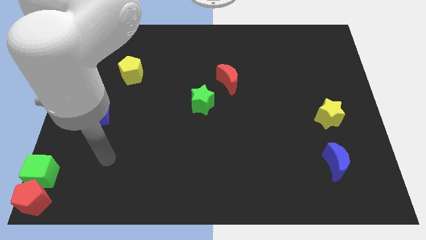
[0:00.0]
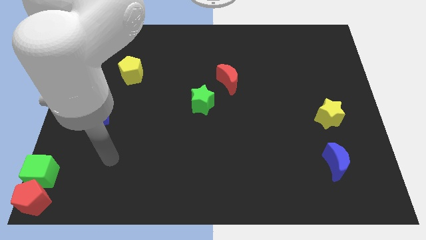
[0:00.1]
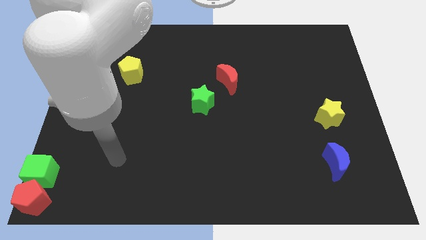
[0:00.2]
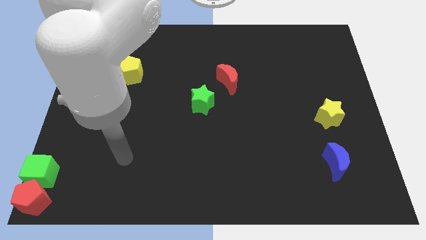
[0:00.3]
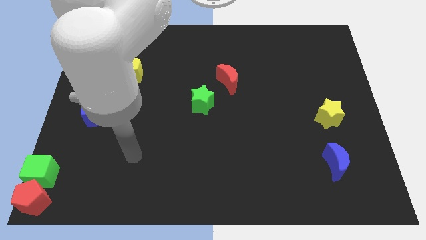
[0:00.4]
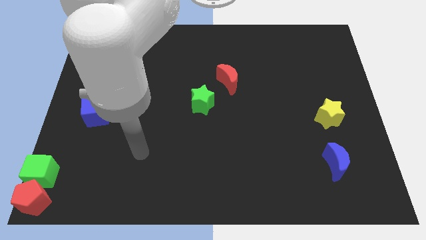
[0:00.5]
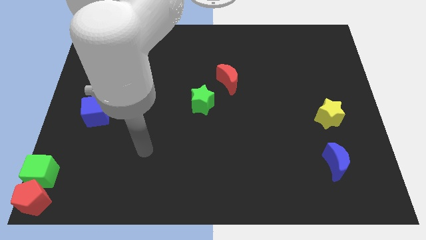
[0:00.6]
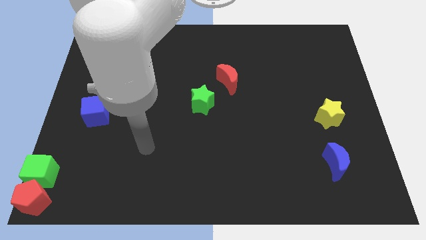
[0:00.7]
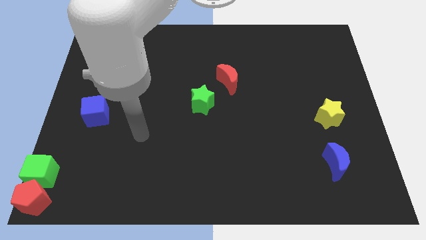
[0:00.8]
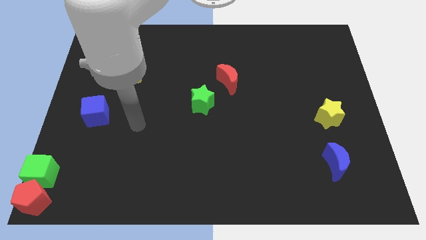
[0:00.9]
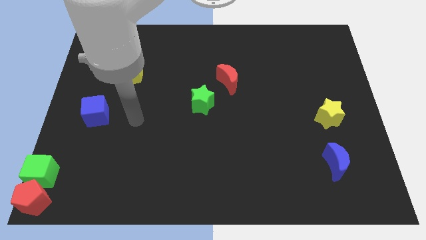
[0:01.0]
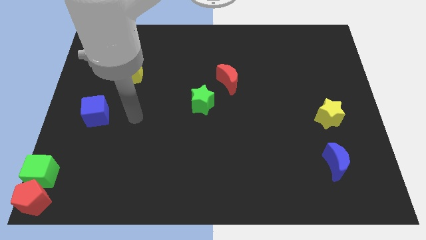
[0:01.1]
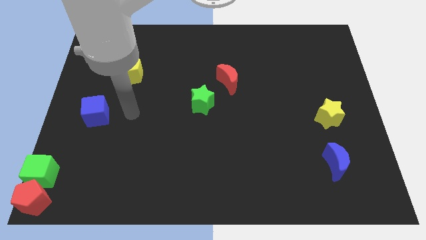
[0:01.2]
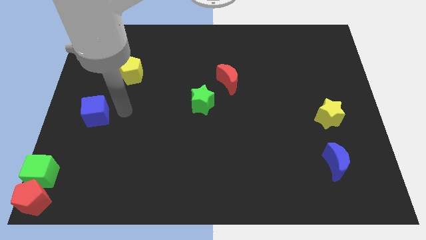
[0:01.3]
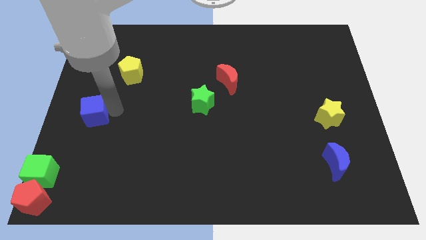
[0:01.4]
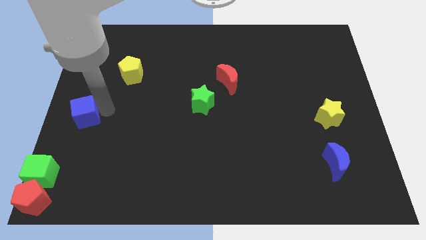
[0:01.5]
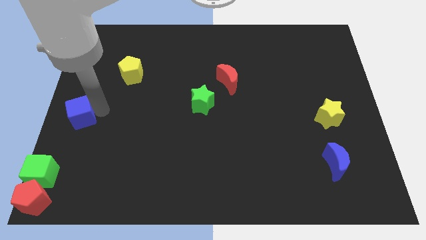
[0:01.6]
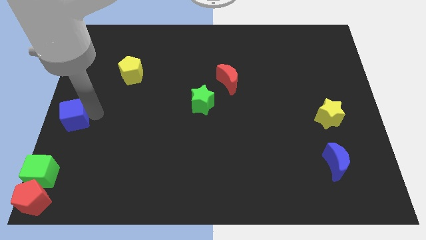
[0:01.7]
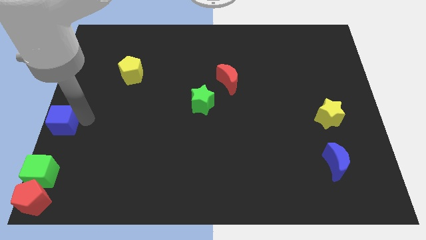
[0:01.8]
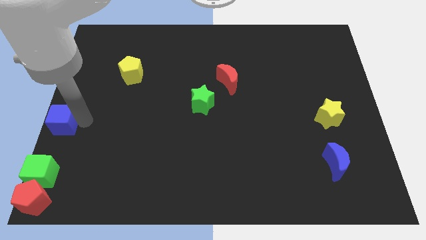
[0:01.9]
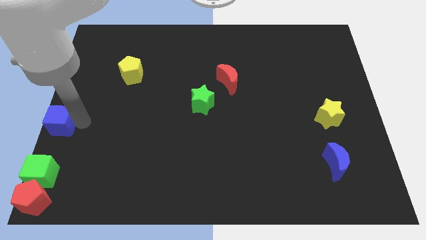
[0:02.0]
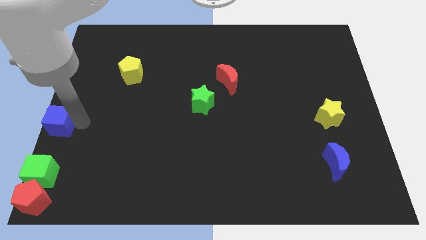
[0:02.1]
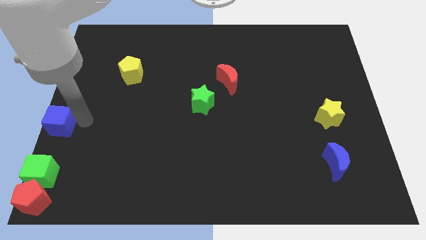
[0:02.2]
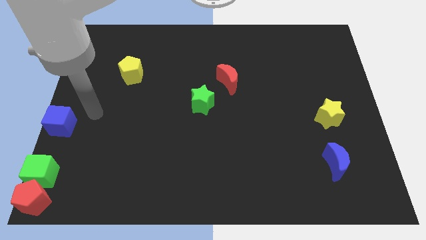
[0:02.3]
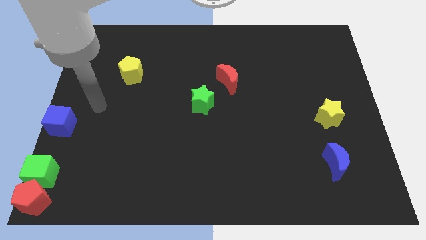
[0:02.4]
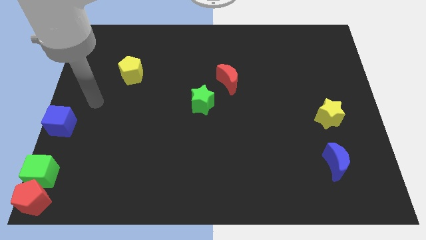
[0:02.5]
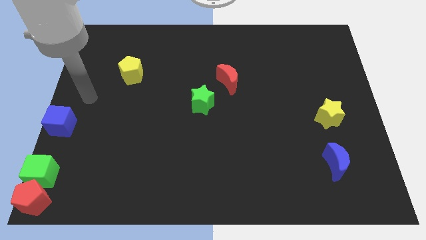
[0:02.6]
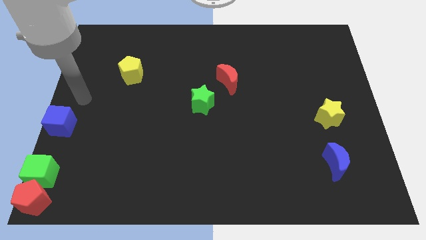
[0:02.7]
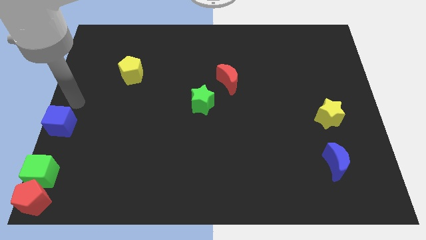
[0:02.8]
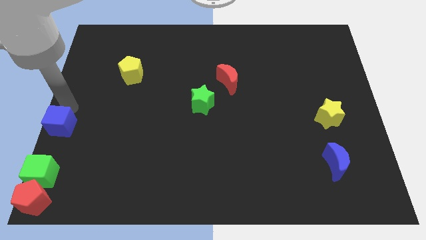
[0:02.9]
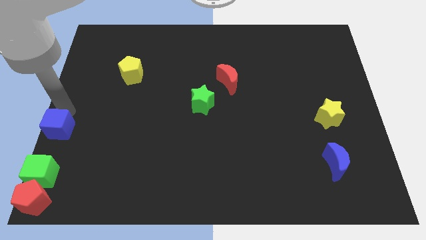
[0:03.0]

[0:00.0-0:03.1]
place the blue cube to the center left

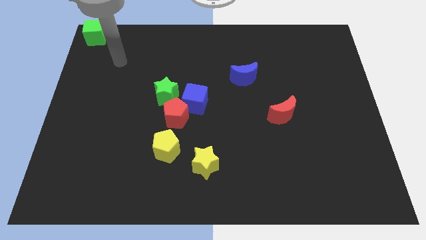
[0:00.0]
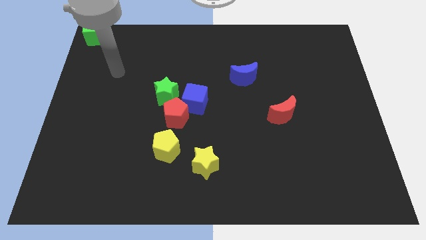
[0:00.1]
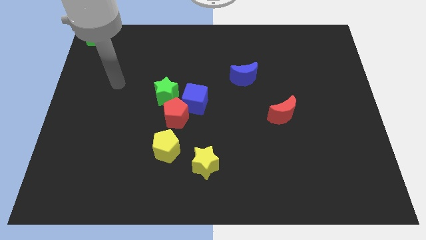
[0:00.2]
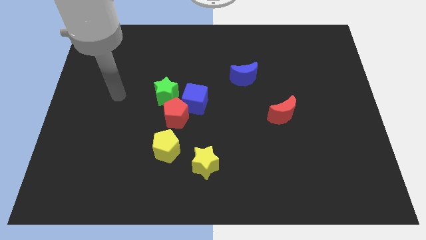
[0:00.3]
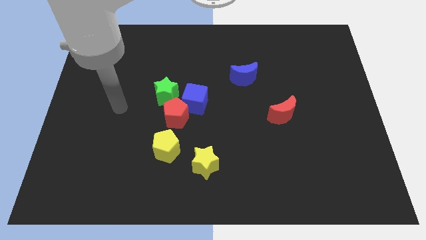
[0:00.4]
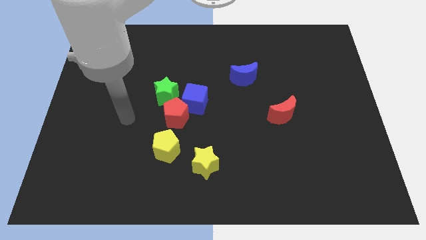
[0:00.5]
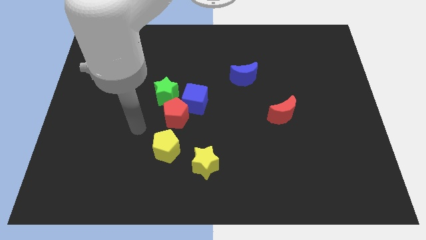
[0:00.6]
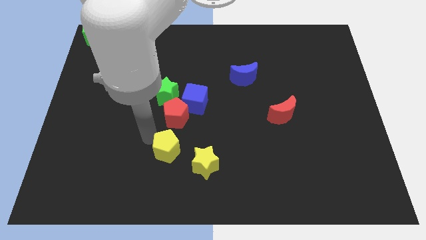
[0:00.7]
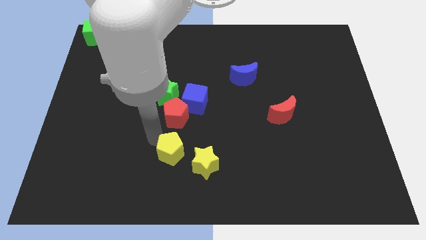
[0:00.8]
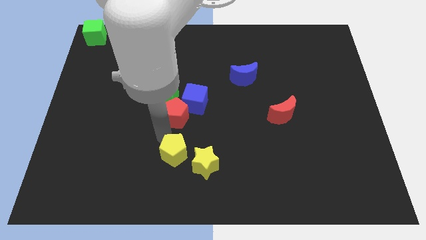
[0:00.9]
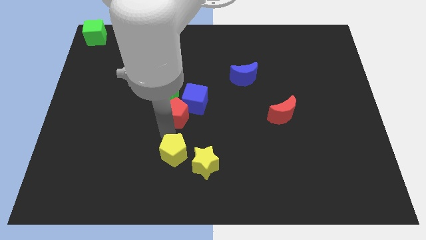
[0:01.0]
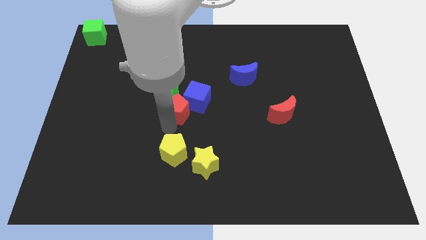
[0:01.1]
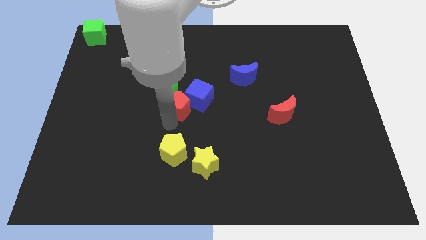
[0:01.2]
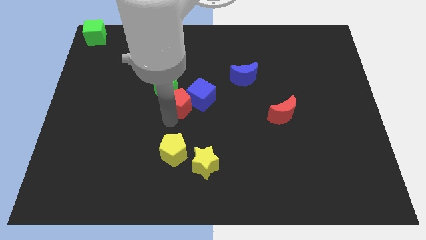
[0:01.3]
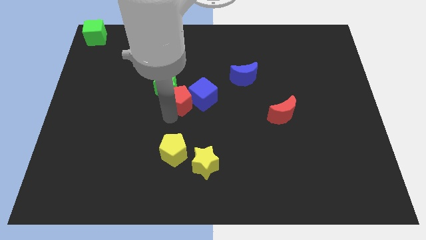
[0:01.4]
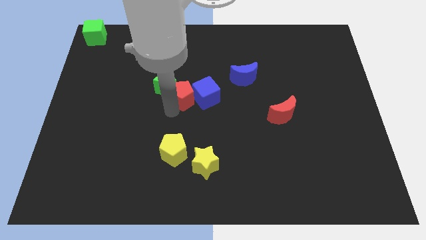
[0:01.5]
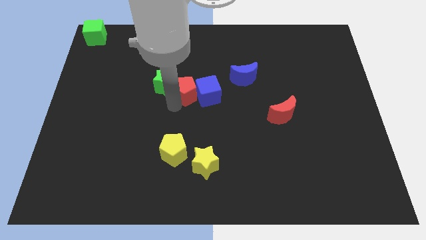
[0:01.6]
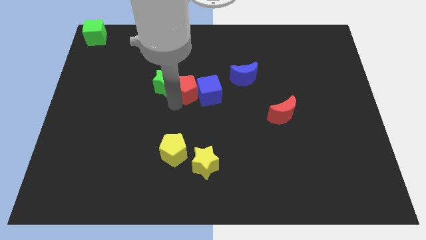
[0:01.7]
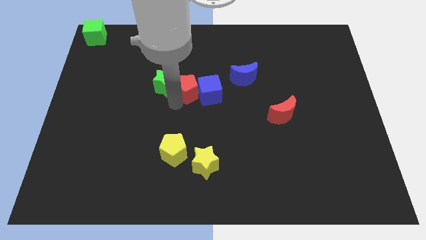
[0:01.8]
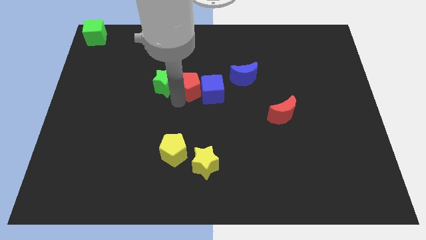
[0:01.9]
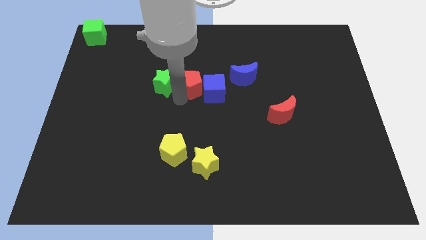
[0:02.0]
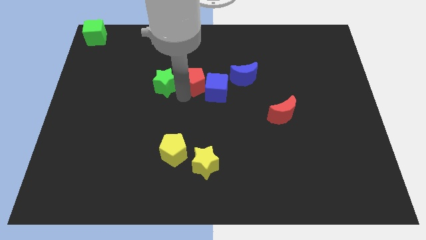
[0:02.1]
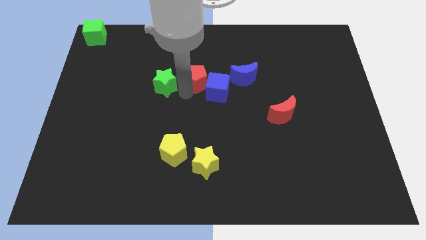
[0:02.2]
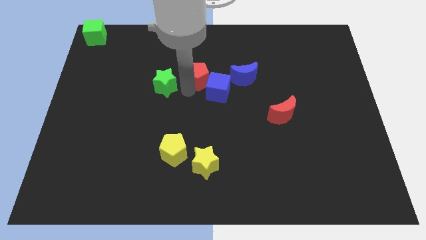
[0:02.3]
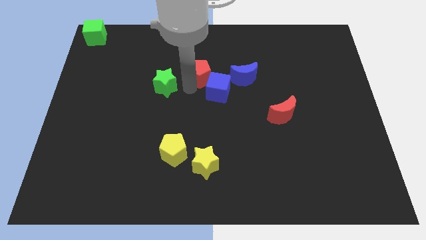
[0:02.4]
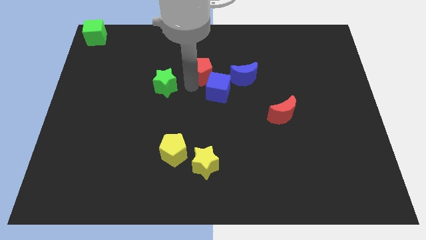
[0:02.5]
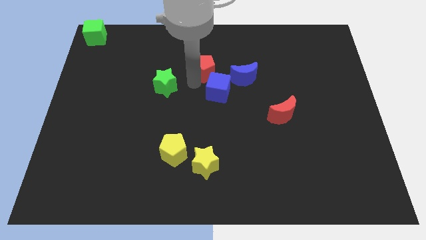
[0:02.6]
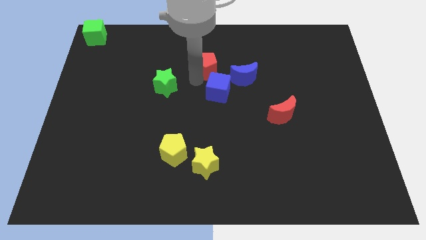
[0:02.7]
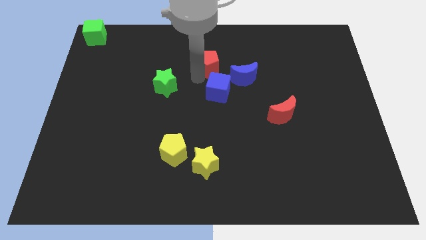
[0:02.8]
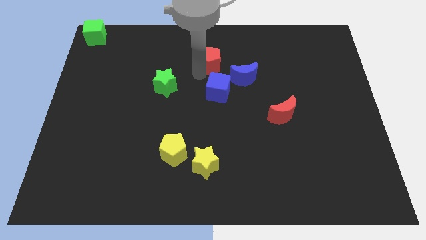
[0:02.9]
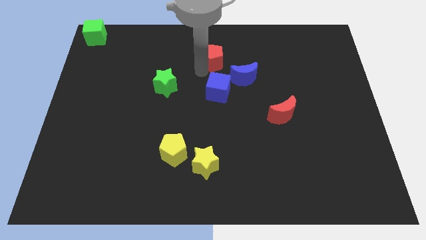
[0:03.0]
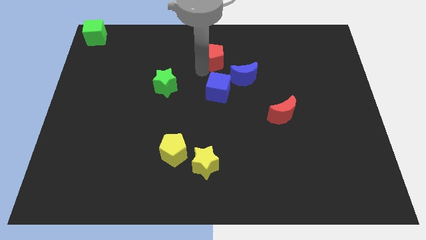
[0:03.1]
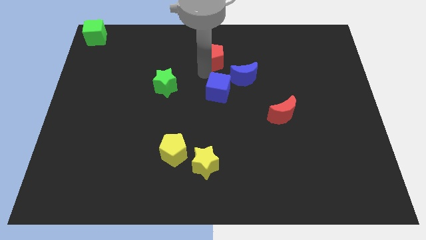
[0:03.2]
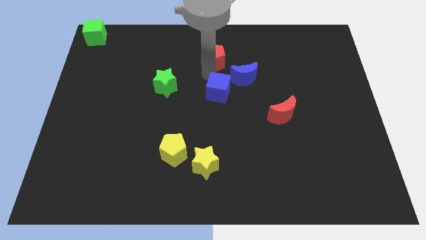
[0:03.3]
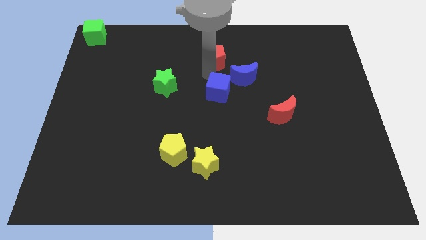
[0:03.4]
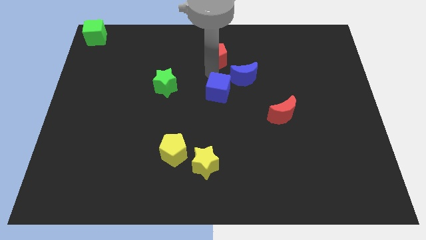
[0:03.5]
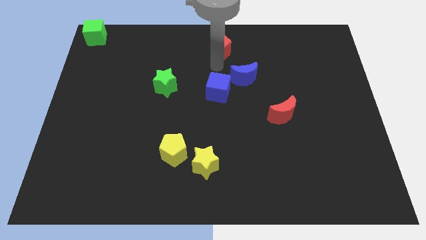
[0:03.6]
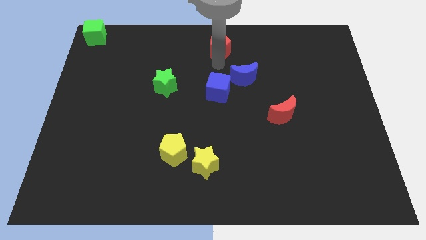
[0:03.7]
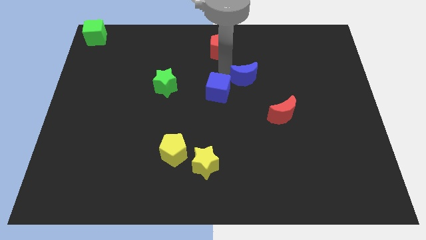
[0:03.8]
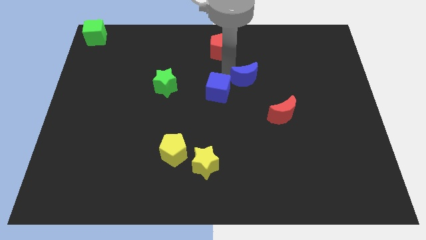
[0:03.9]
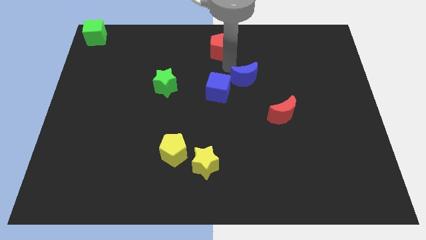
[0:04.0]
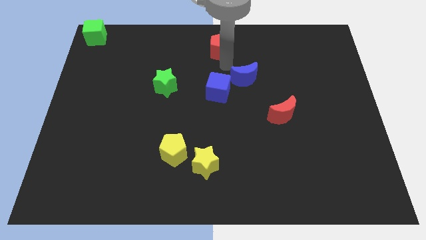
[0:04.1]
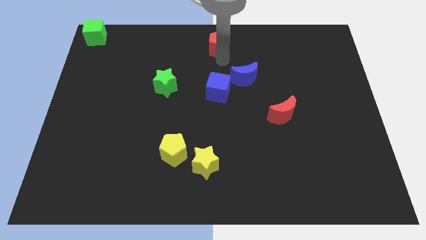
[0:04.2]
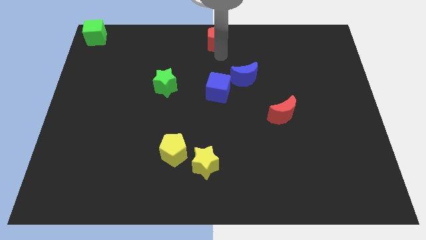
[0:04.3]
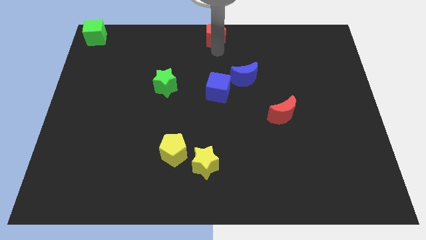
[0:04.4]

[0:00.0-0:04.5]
slide the red pentagon at the top center

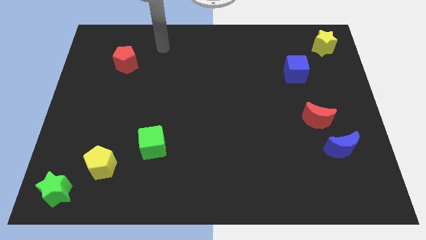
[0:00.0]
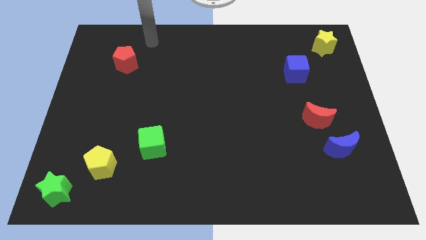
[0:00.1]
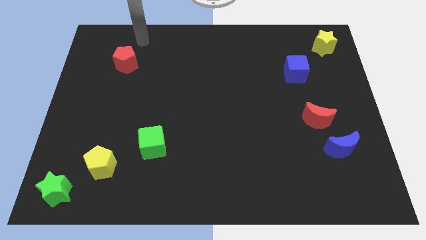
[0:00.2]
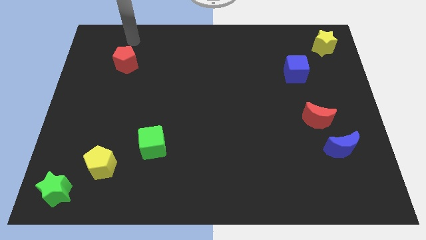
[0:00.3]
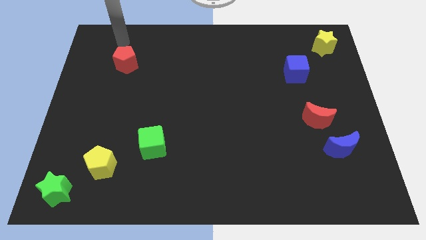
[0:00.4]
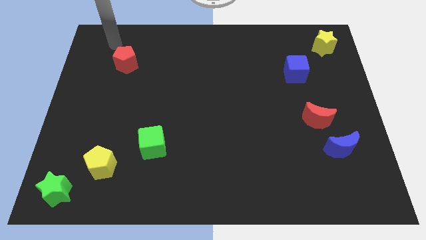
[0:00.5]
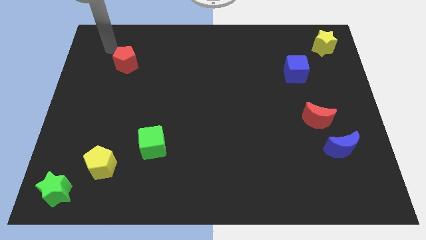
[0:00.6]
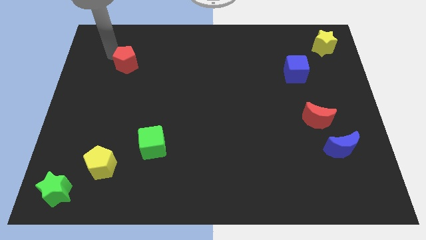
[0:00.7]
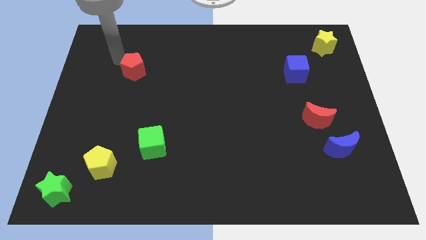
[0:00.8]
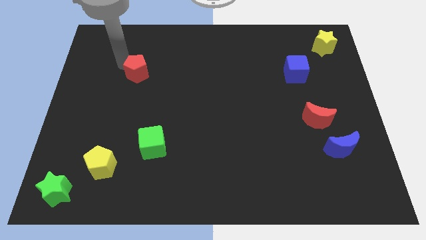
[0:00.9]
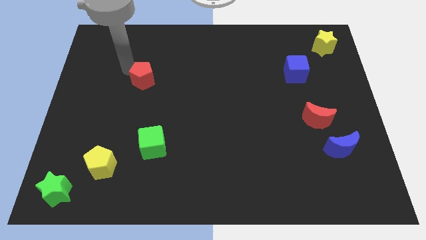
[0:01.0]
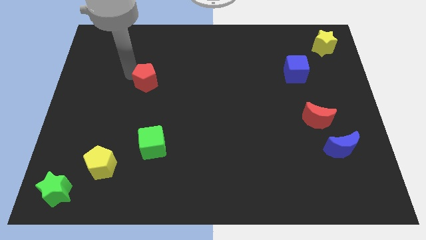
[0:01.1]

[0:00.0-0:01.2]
place the red pentagon vertically above the green cube

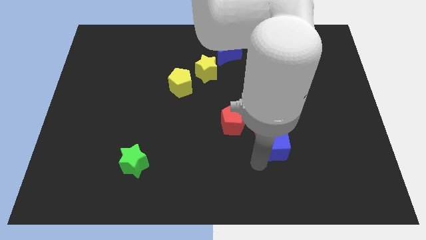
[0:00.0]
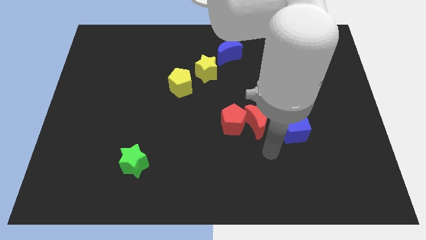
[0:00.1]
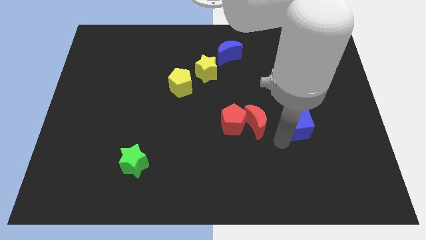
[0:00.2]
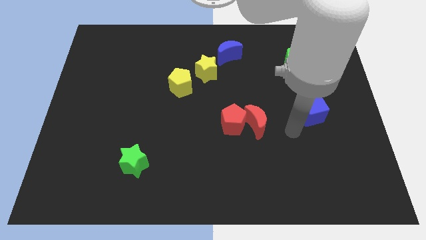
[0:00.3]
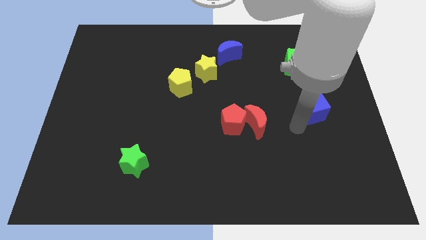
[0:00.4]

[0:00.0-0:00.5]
move the blue block center right of the board
